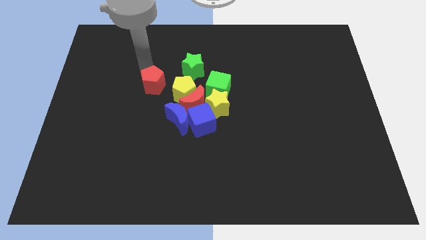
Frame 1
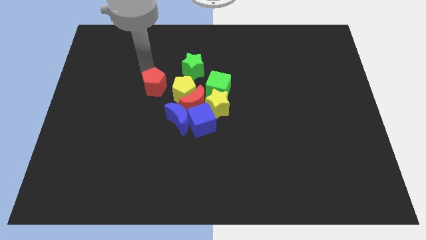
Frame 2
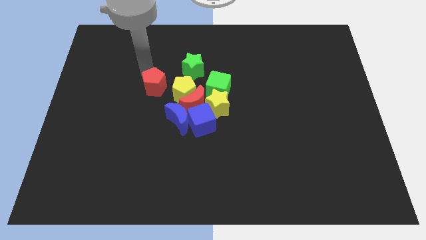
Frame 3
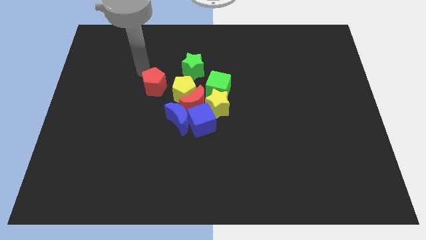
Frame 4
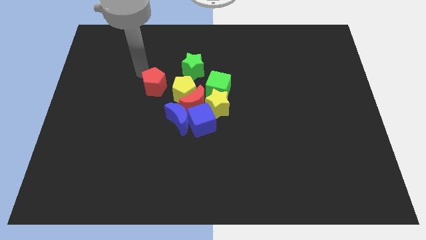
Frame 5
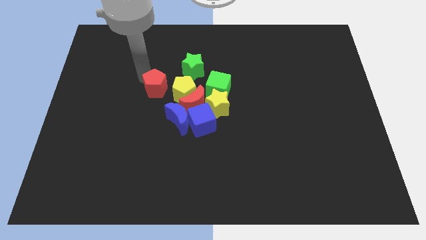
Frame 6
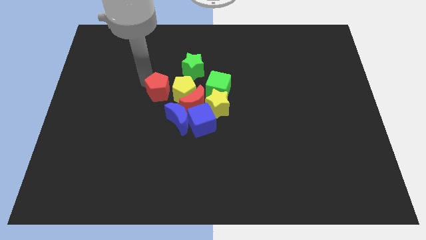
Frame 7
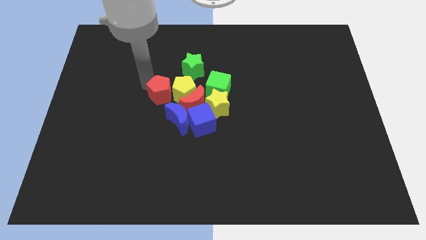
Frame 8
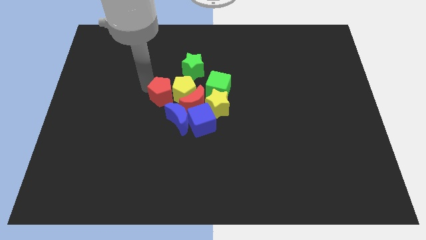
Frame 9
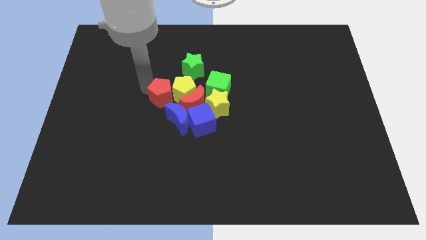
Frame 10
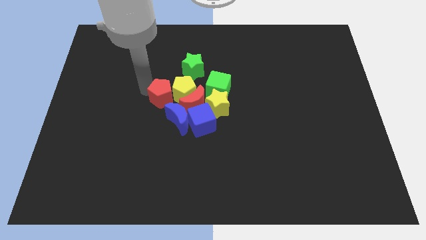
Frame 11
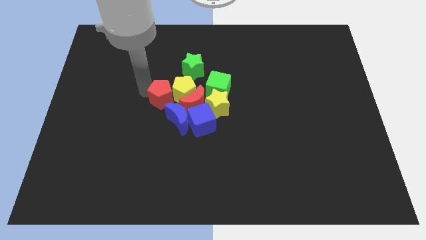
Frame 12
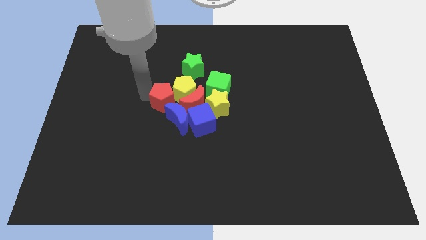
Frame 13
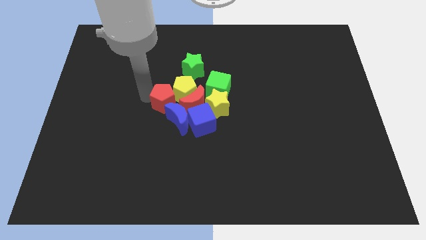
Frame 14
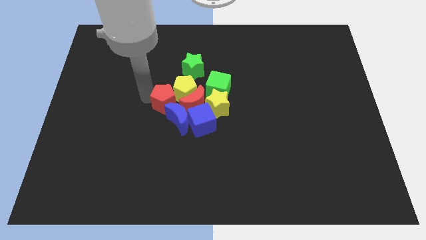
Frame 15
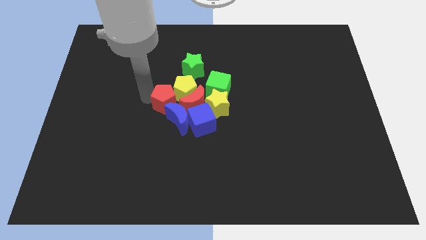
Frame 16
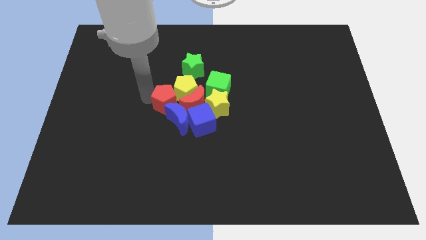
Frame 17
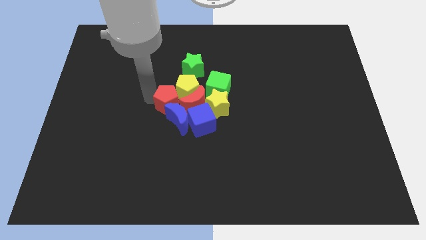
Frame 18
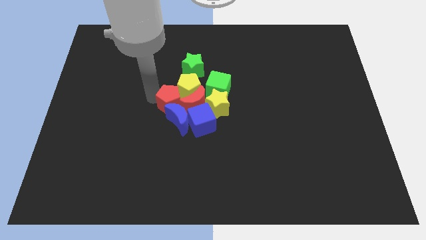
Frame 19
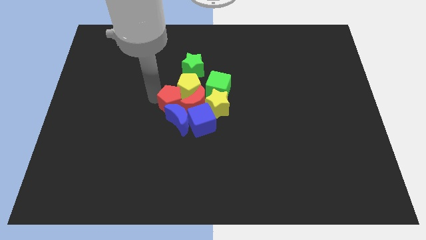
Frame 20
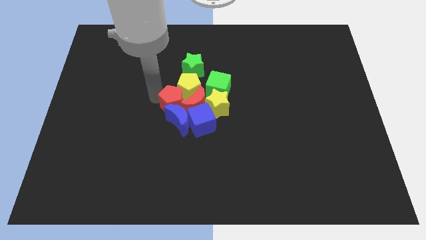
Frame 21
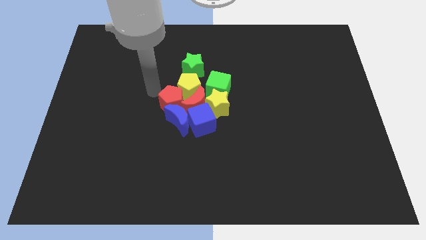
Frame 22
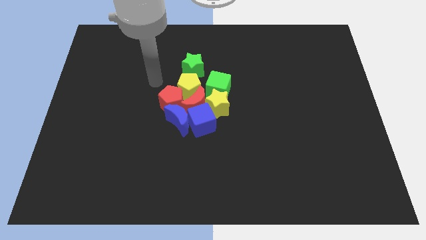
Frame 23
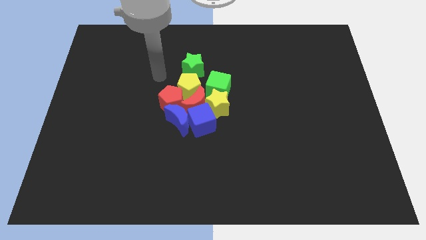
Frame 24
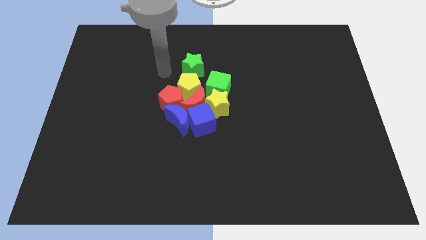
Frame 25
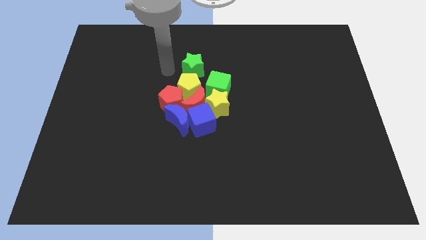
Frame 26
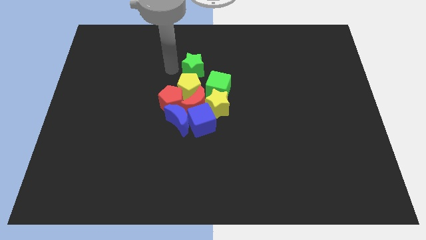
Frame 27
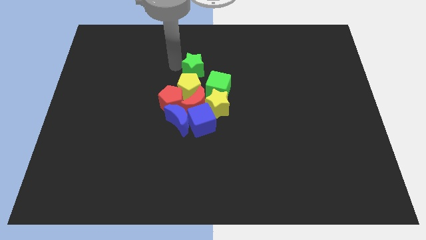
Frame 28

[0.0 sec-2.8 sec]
push the red pentagon into the red moon

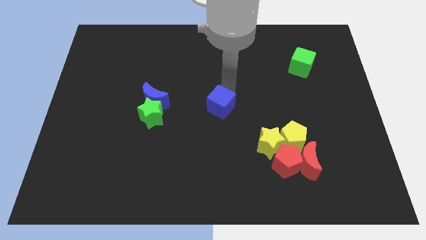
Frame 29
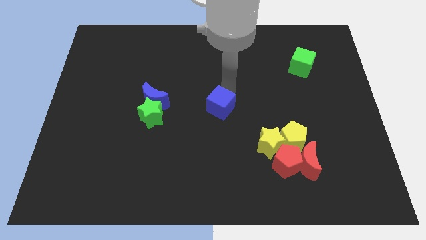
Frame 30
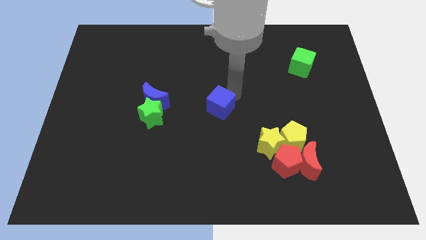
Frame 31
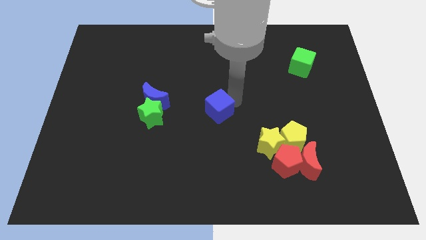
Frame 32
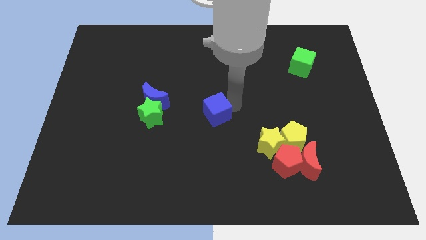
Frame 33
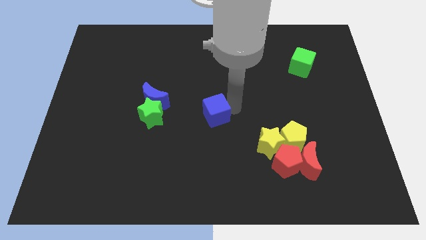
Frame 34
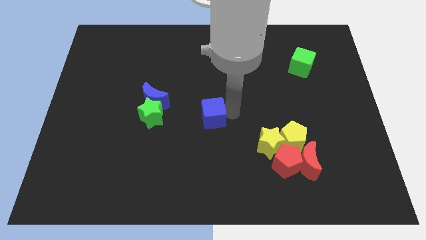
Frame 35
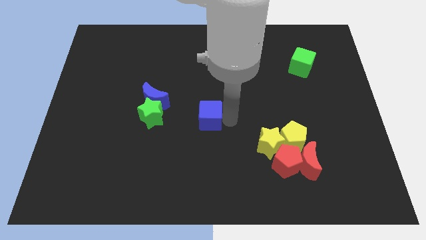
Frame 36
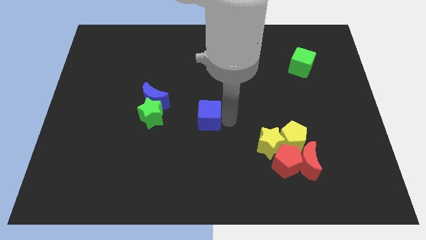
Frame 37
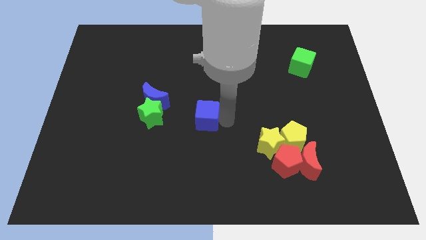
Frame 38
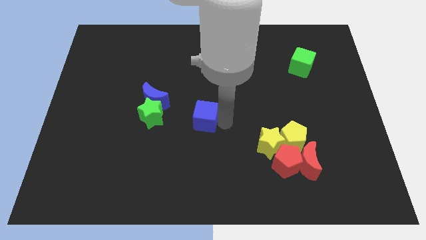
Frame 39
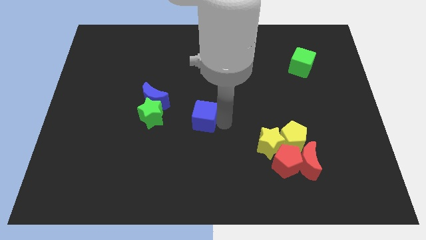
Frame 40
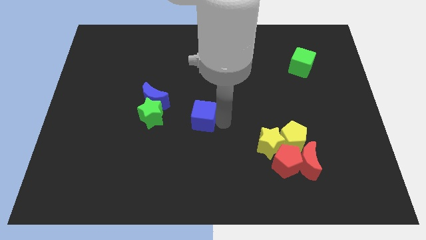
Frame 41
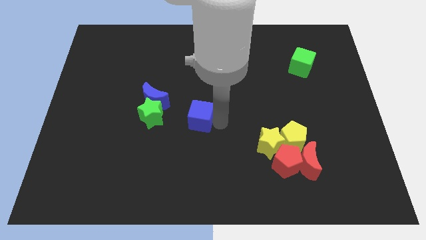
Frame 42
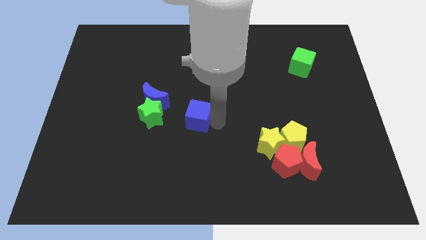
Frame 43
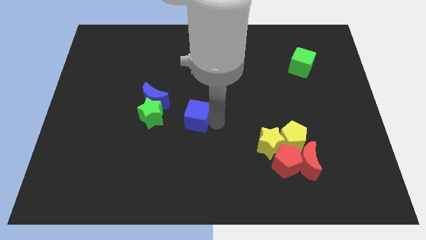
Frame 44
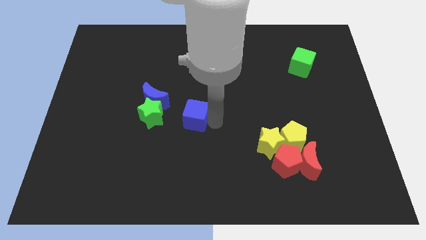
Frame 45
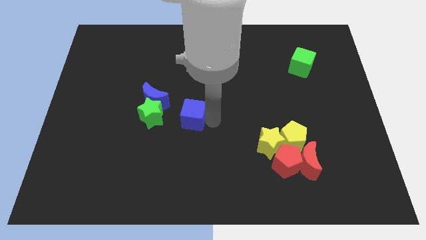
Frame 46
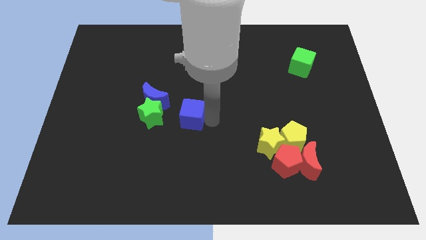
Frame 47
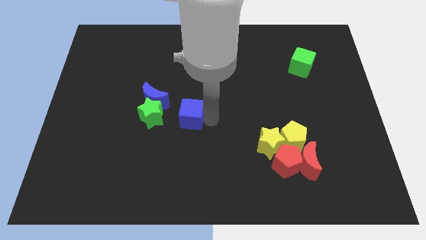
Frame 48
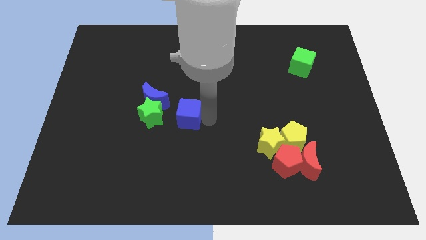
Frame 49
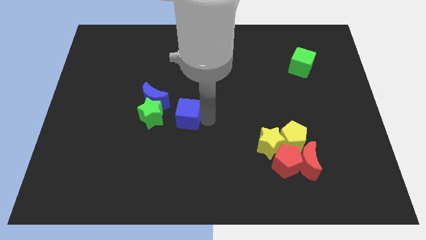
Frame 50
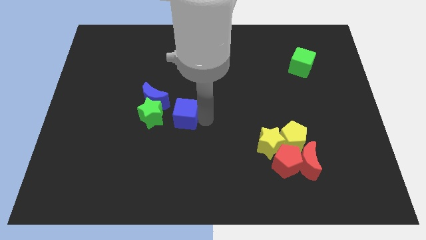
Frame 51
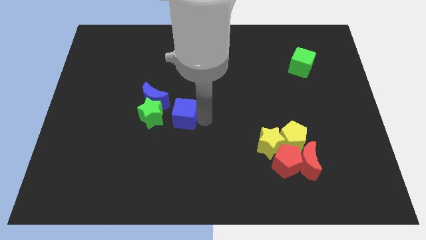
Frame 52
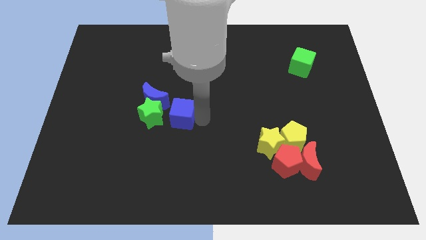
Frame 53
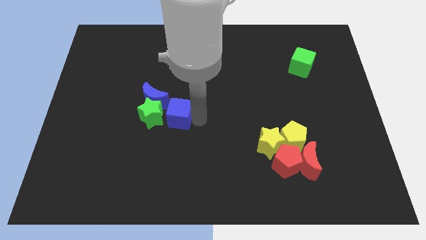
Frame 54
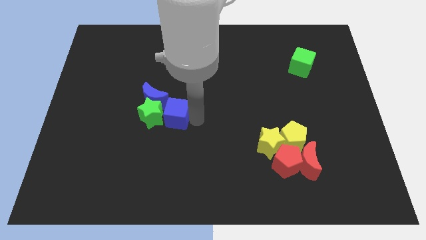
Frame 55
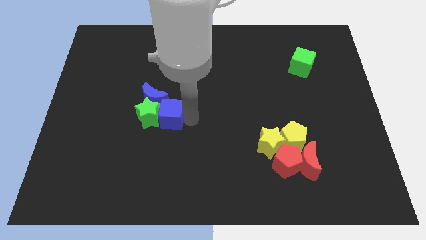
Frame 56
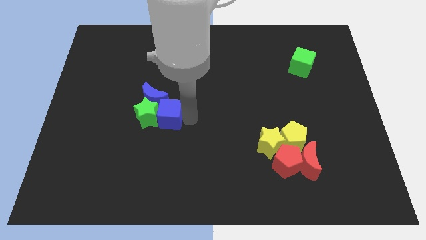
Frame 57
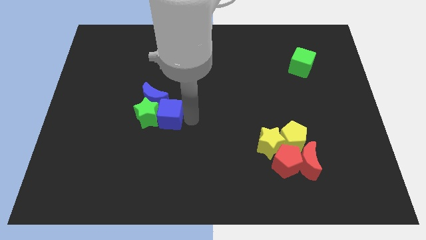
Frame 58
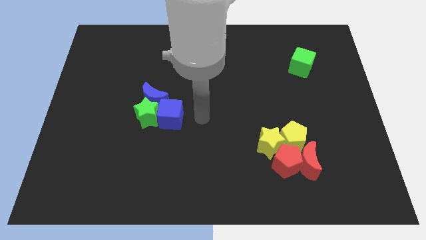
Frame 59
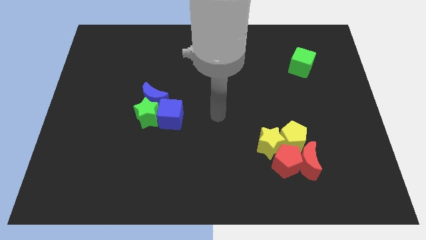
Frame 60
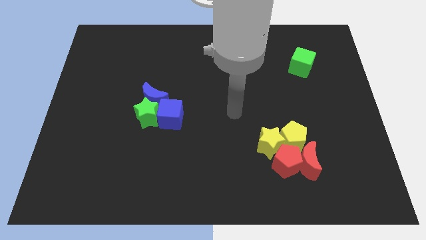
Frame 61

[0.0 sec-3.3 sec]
push the blue cube into the green star

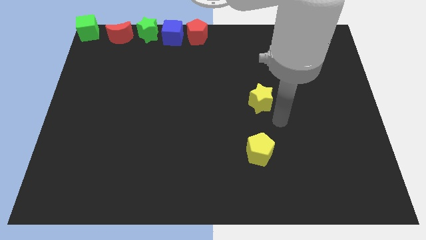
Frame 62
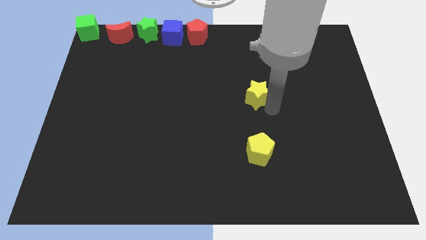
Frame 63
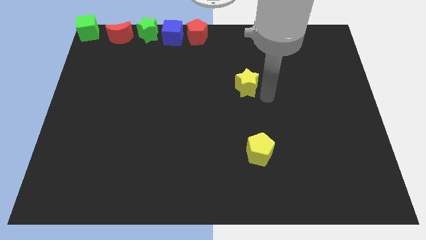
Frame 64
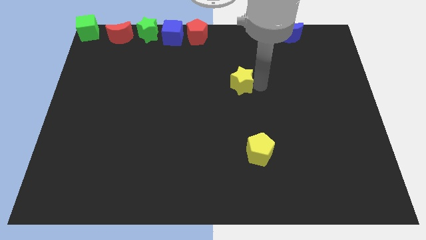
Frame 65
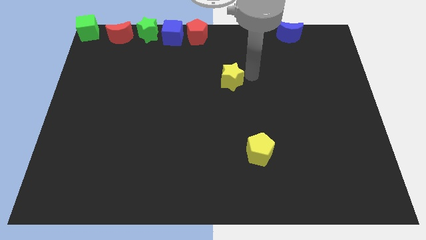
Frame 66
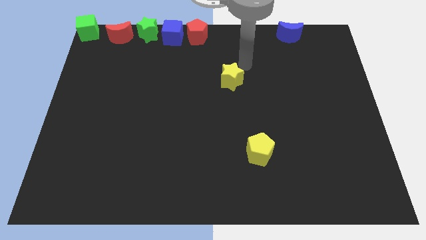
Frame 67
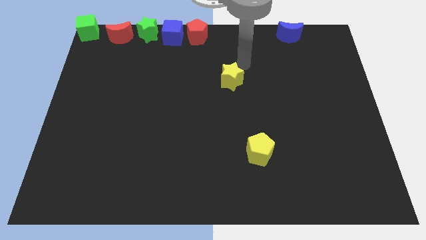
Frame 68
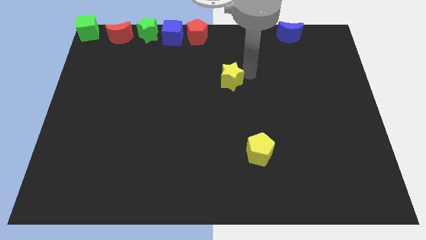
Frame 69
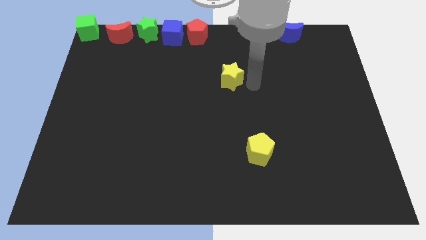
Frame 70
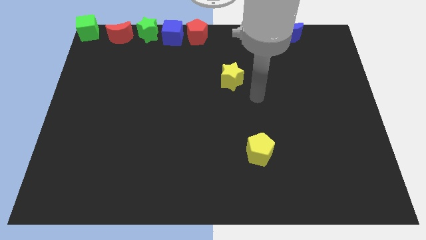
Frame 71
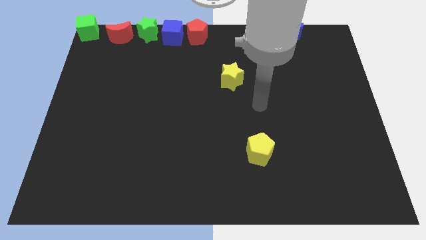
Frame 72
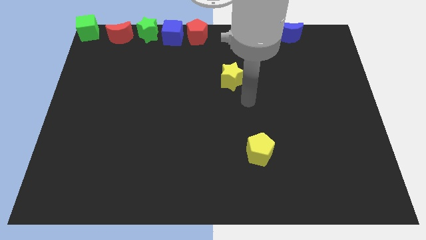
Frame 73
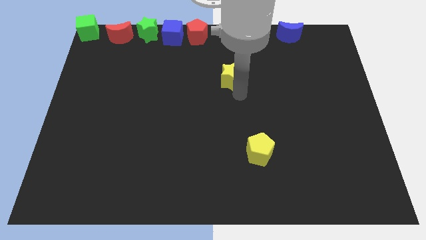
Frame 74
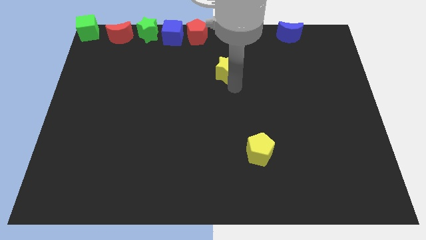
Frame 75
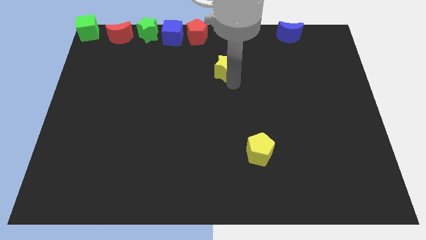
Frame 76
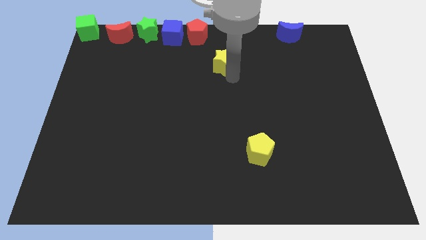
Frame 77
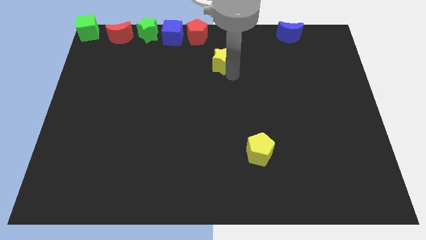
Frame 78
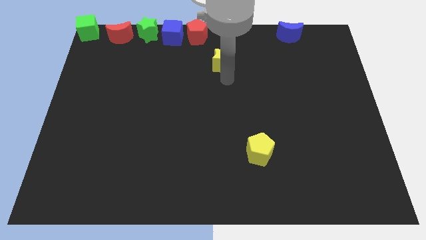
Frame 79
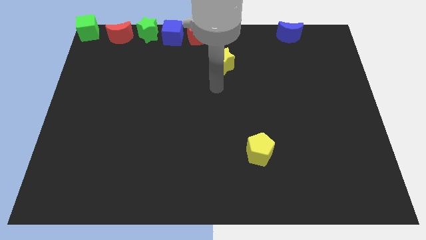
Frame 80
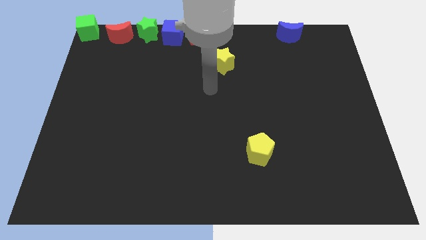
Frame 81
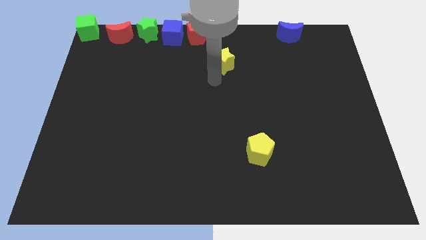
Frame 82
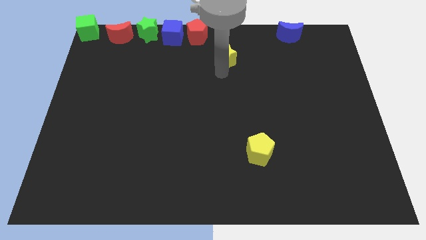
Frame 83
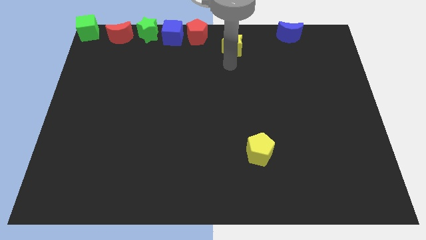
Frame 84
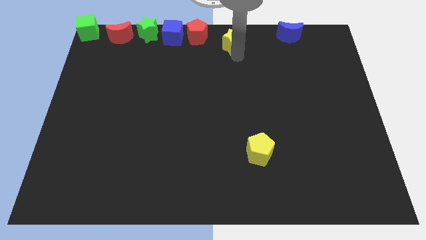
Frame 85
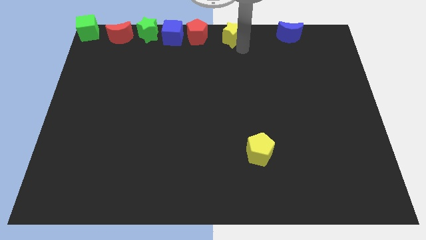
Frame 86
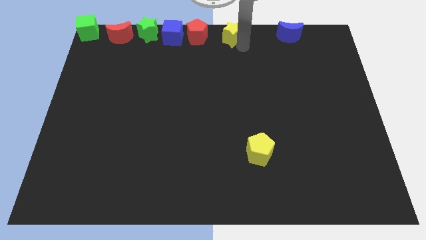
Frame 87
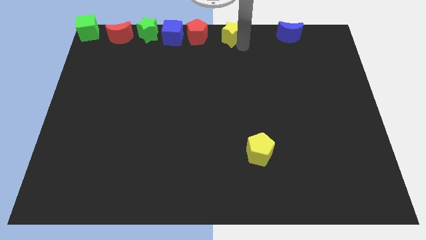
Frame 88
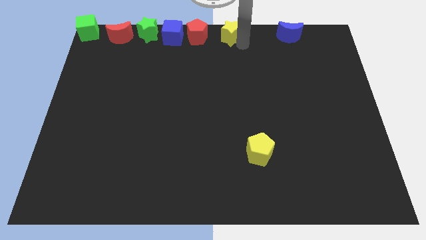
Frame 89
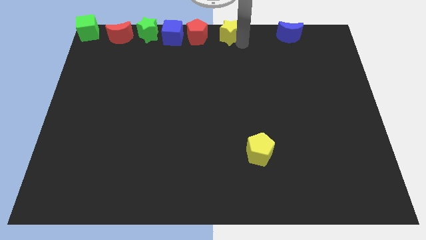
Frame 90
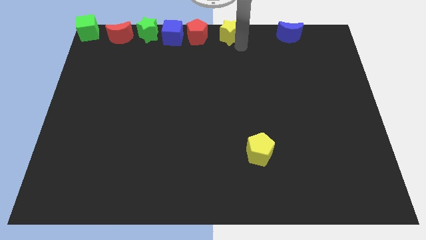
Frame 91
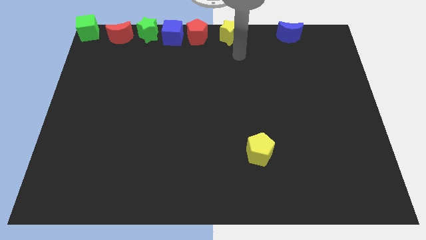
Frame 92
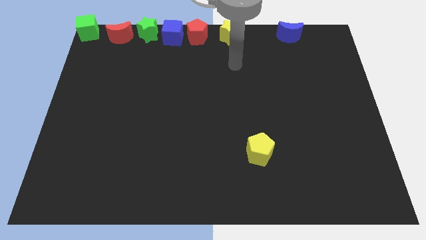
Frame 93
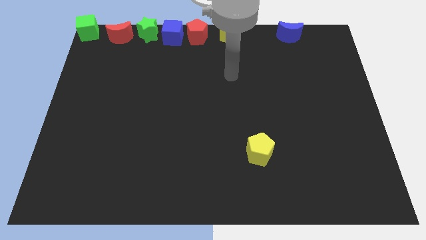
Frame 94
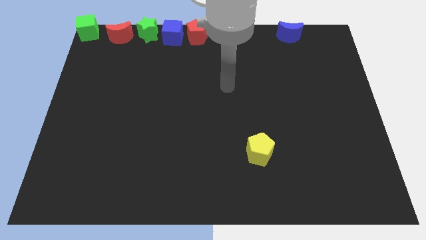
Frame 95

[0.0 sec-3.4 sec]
place the yellow star to the right side of the re pentagon
